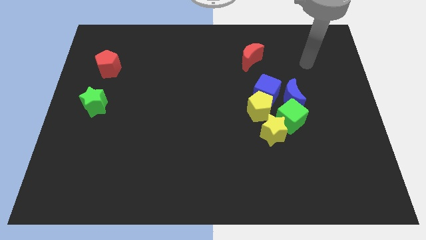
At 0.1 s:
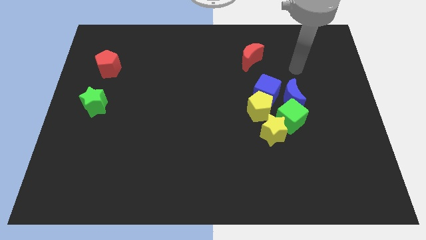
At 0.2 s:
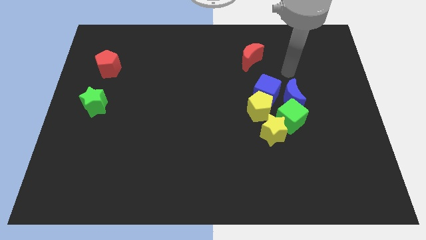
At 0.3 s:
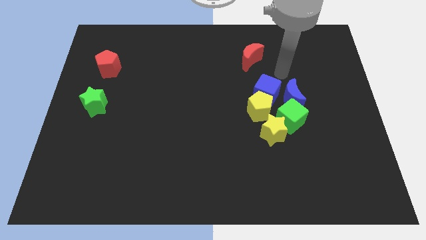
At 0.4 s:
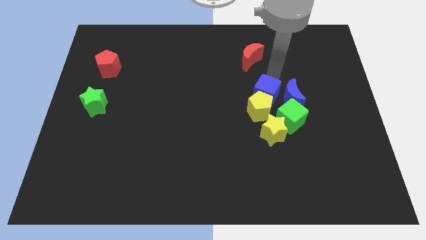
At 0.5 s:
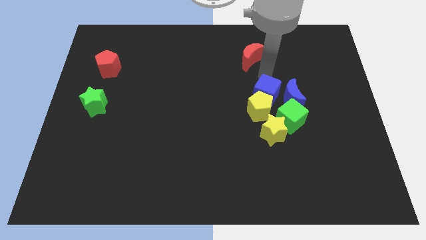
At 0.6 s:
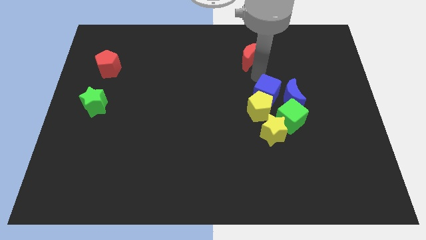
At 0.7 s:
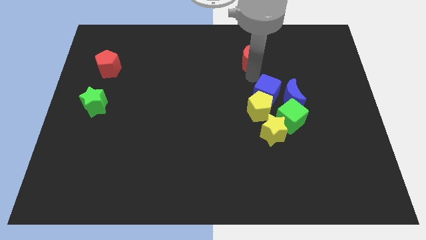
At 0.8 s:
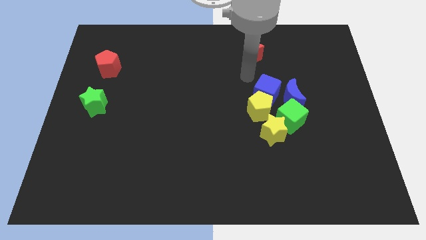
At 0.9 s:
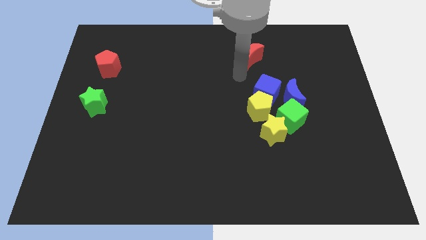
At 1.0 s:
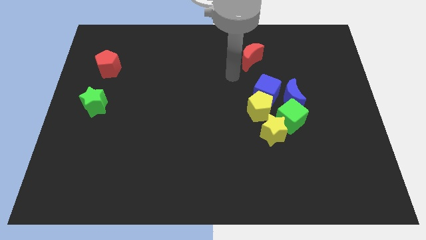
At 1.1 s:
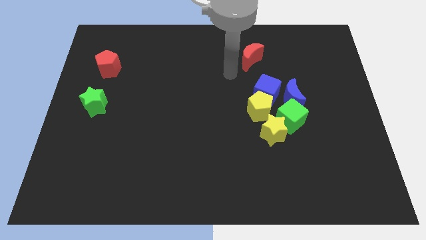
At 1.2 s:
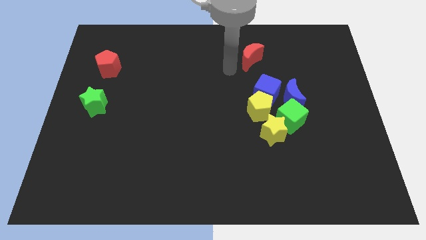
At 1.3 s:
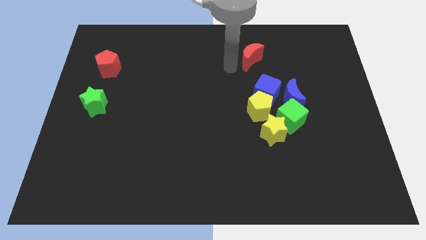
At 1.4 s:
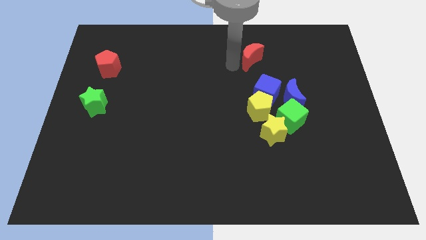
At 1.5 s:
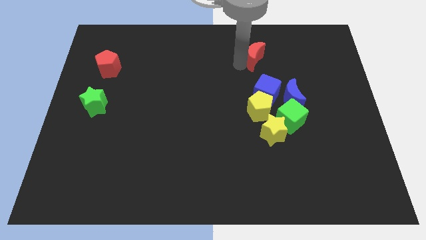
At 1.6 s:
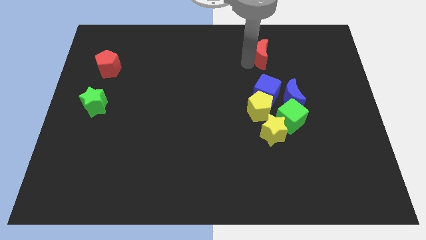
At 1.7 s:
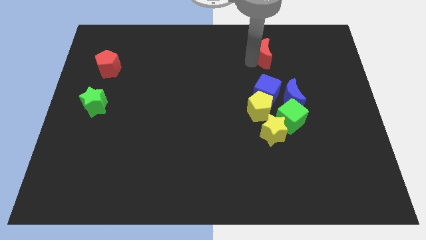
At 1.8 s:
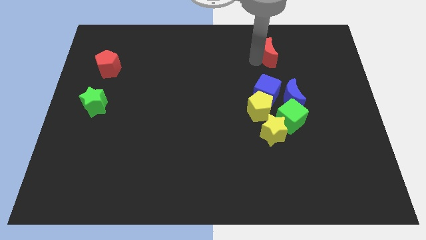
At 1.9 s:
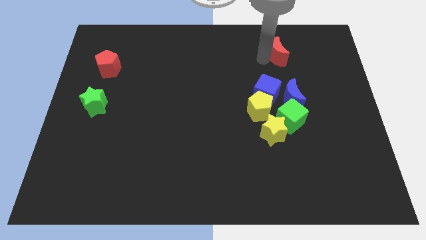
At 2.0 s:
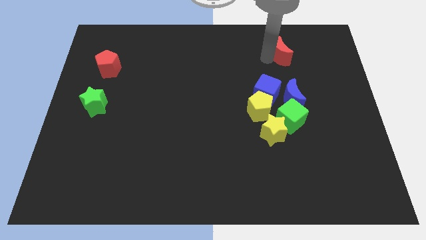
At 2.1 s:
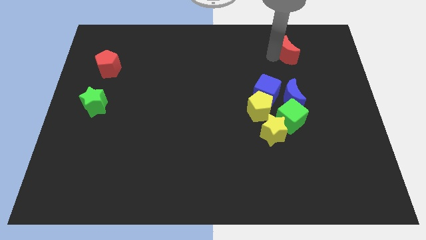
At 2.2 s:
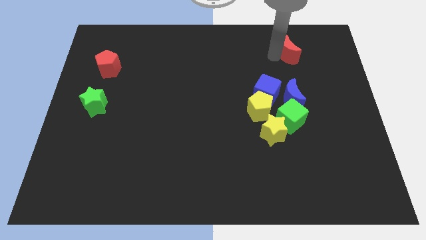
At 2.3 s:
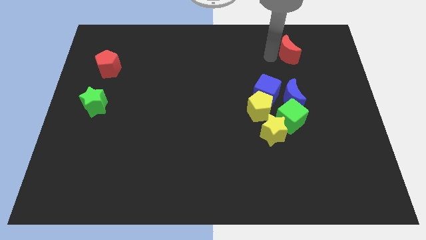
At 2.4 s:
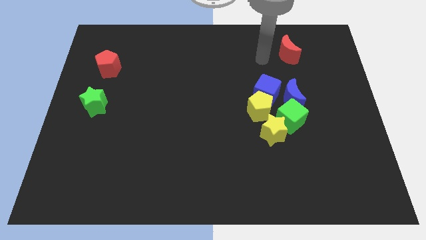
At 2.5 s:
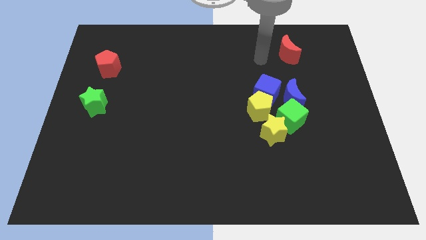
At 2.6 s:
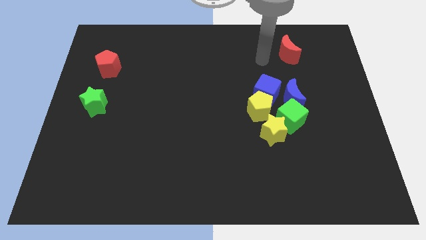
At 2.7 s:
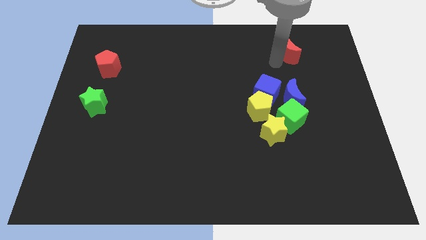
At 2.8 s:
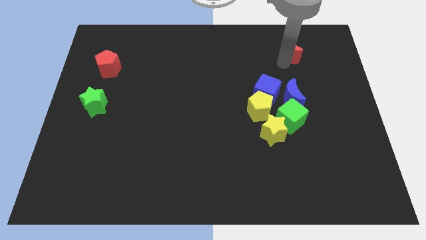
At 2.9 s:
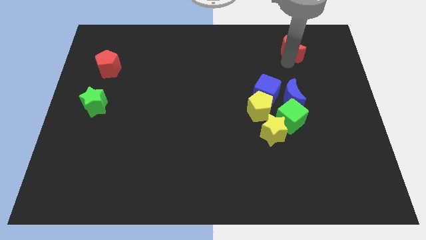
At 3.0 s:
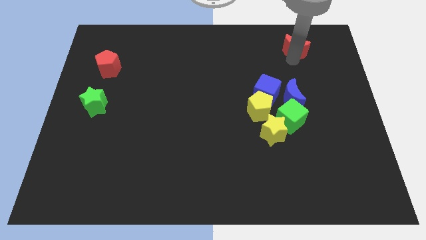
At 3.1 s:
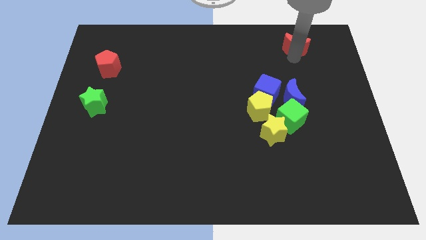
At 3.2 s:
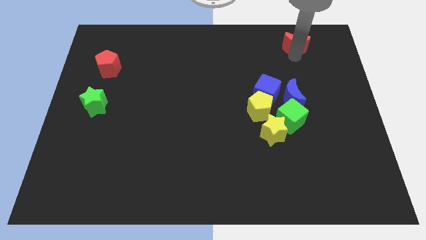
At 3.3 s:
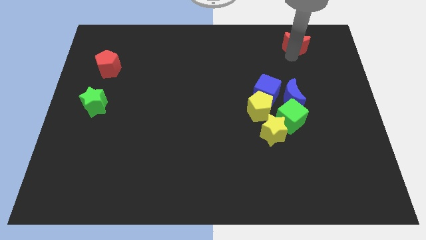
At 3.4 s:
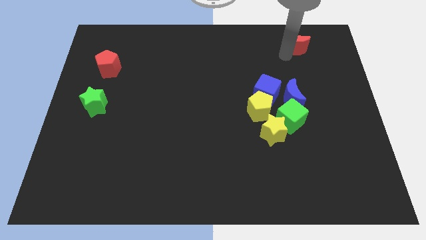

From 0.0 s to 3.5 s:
move the red crescent vertically above the blue moon

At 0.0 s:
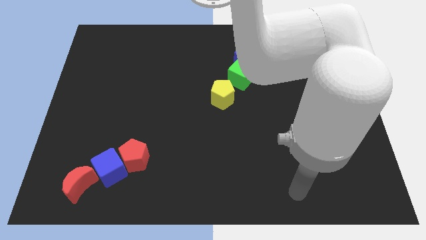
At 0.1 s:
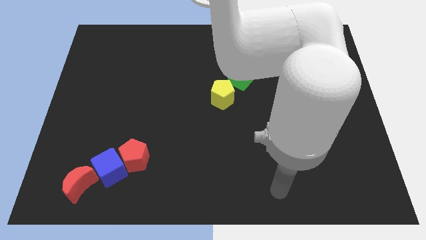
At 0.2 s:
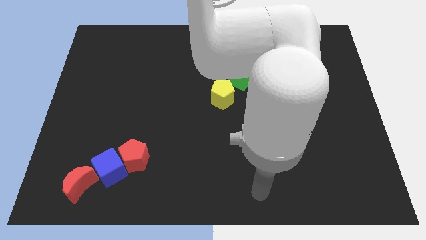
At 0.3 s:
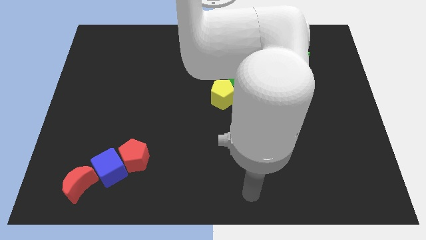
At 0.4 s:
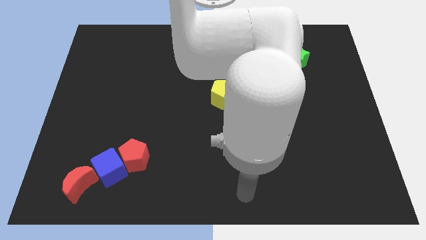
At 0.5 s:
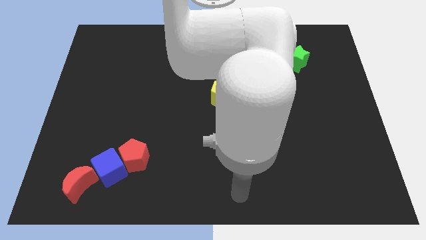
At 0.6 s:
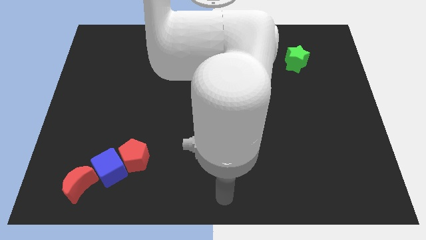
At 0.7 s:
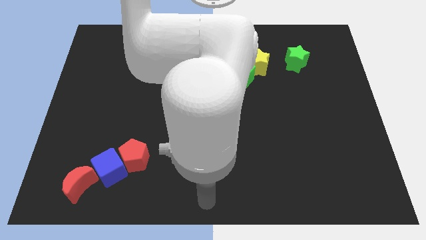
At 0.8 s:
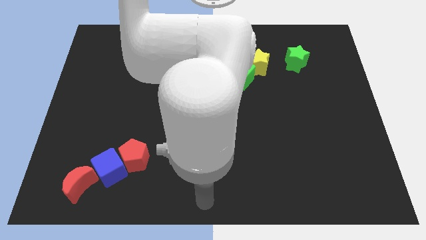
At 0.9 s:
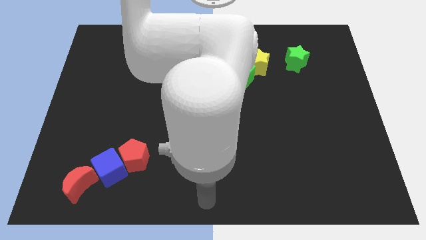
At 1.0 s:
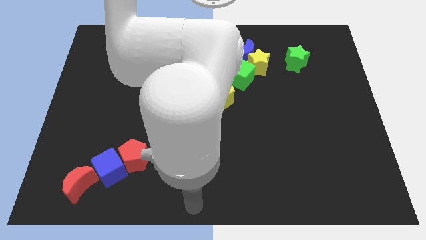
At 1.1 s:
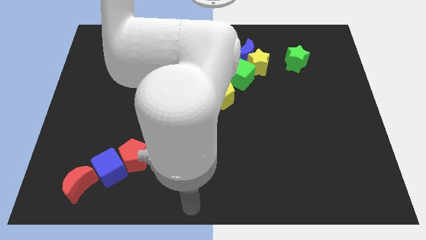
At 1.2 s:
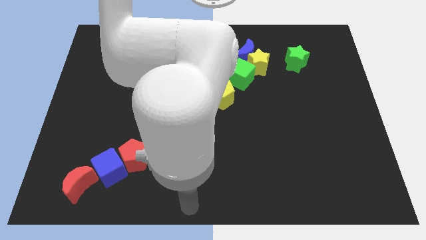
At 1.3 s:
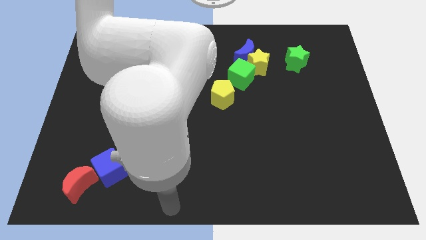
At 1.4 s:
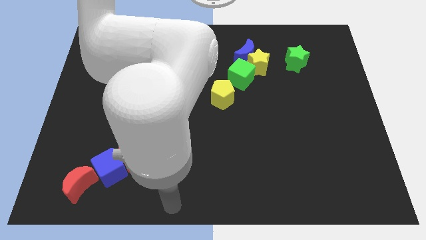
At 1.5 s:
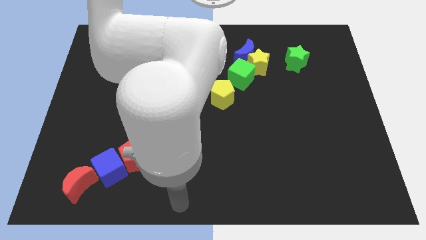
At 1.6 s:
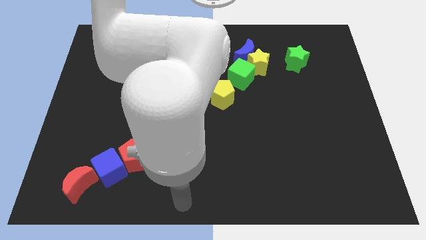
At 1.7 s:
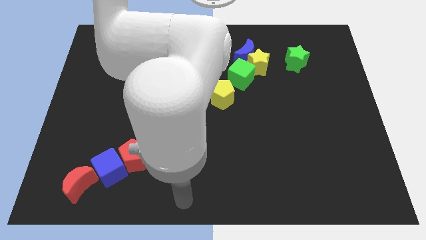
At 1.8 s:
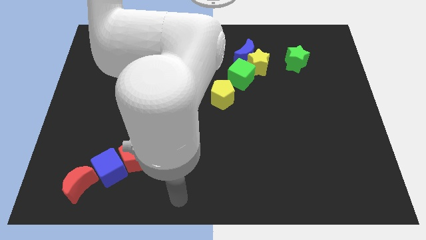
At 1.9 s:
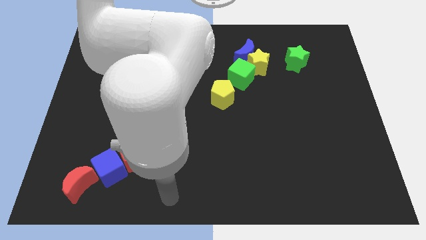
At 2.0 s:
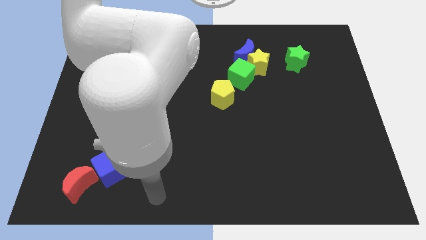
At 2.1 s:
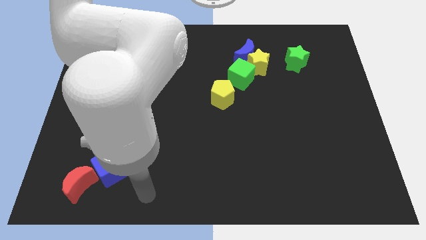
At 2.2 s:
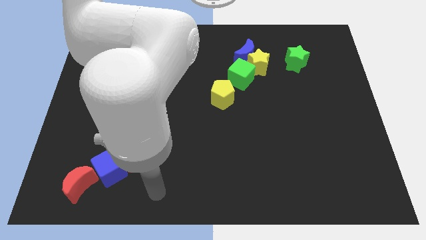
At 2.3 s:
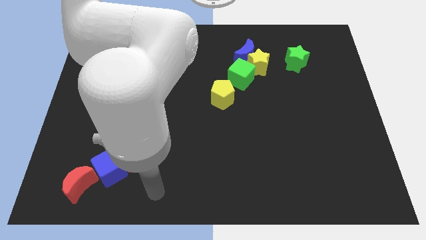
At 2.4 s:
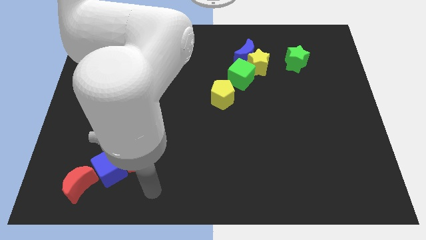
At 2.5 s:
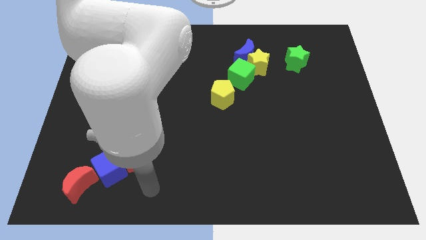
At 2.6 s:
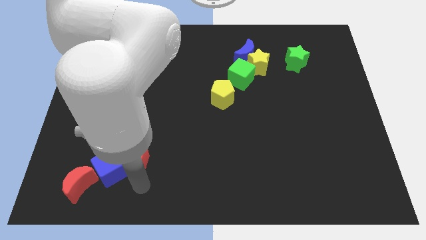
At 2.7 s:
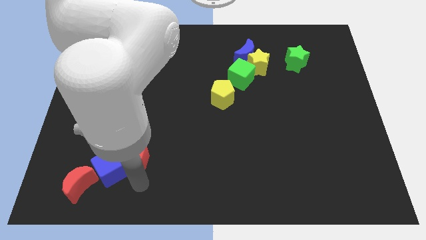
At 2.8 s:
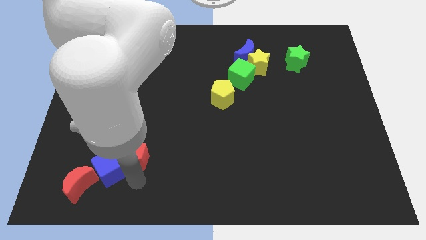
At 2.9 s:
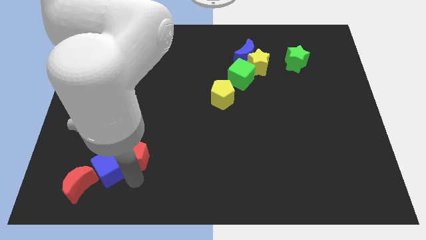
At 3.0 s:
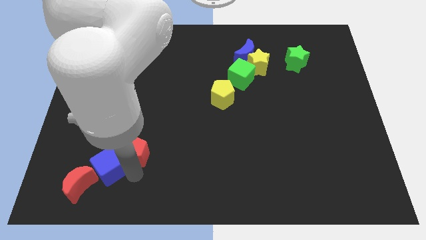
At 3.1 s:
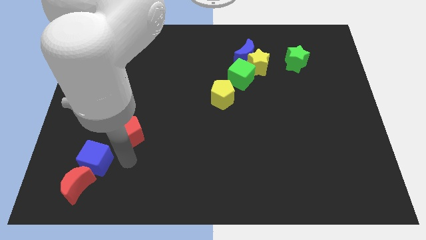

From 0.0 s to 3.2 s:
move your arm towards the red pentagon

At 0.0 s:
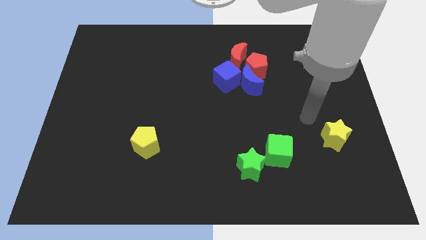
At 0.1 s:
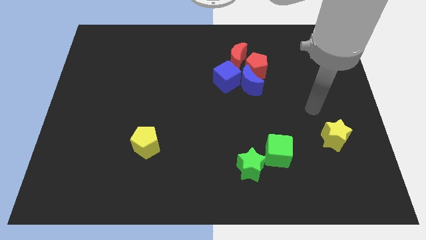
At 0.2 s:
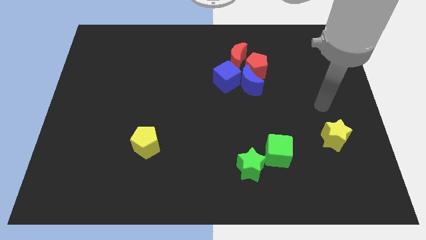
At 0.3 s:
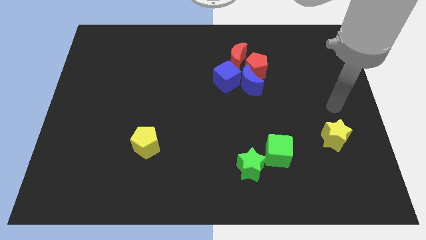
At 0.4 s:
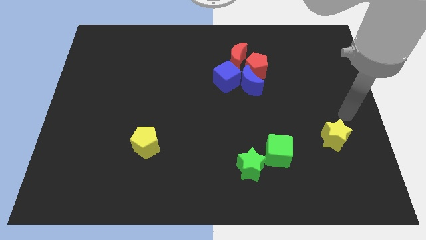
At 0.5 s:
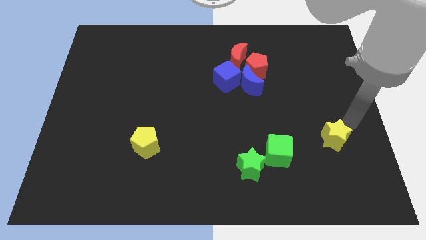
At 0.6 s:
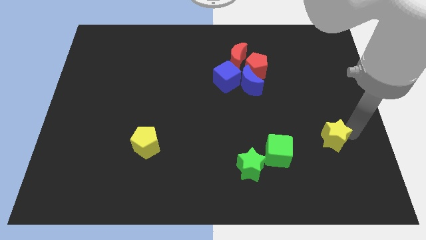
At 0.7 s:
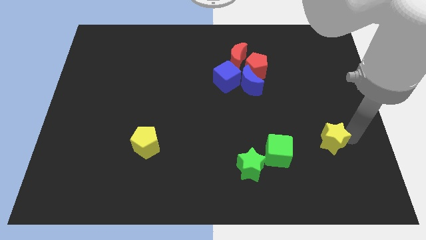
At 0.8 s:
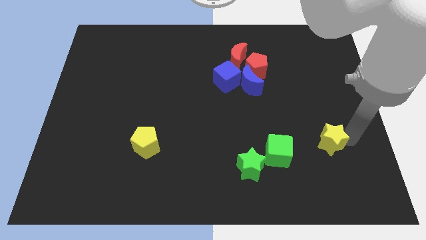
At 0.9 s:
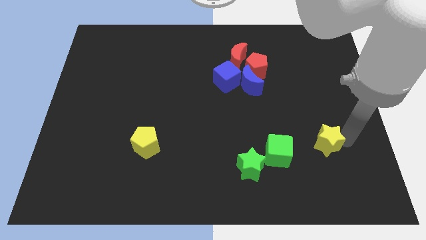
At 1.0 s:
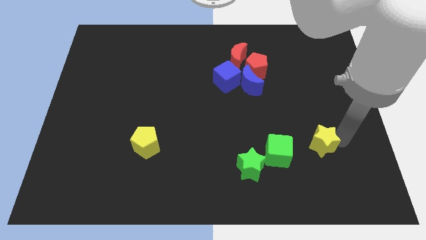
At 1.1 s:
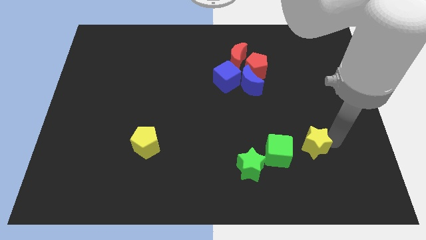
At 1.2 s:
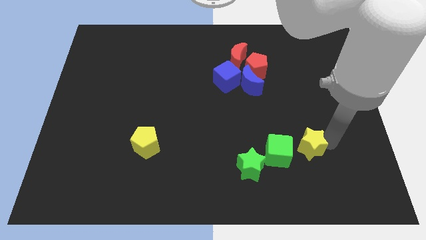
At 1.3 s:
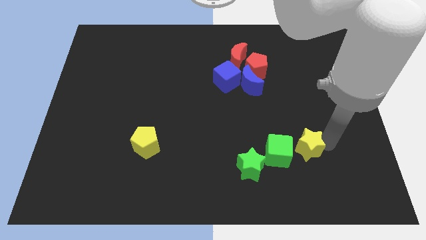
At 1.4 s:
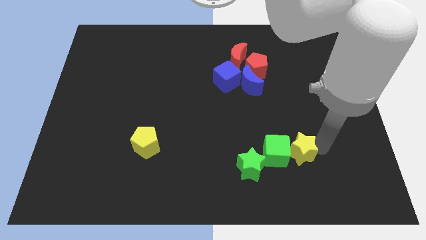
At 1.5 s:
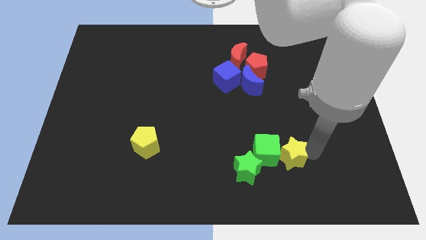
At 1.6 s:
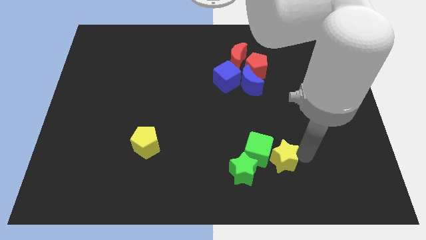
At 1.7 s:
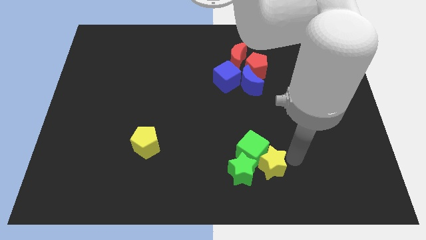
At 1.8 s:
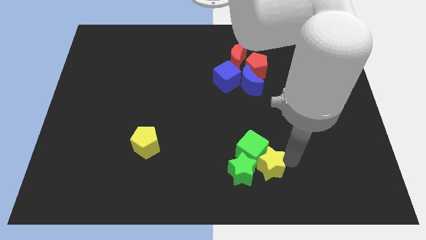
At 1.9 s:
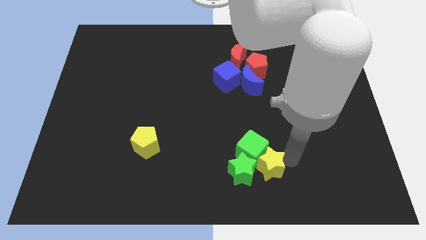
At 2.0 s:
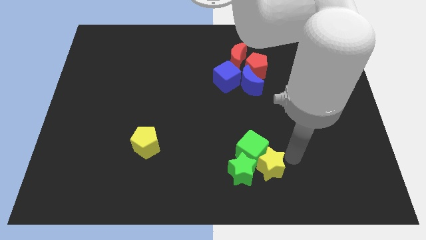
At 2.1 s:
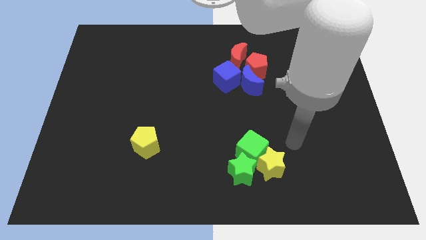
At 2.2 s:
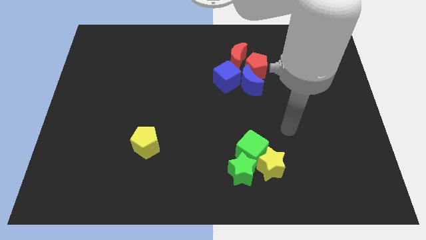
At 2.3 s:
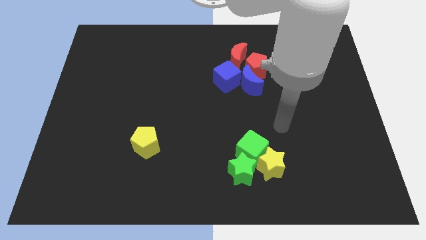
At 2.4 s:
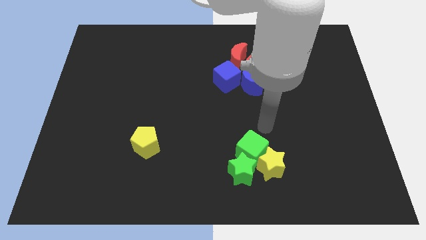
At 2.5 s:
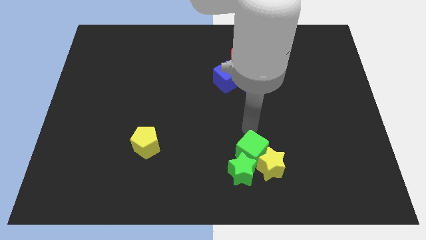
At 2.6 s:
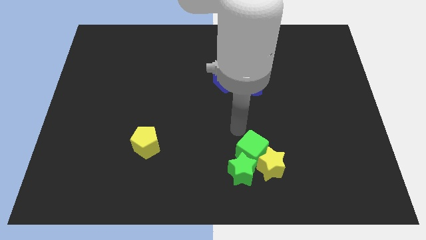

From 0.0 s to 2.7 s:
push the yellow star into the green cube and green star
